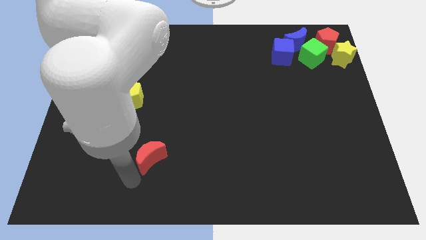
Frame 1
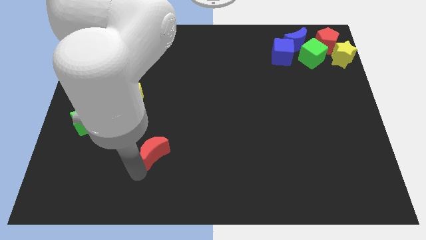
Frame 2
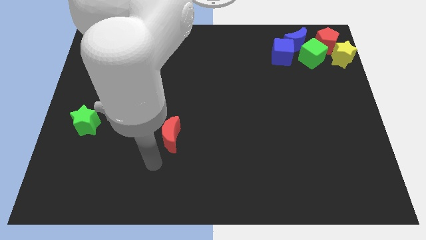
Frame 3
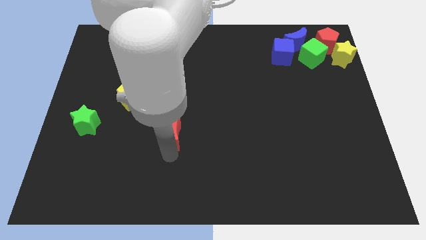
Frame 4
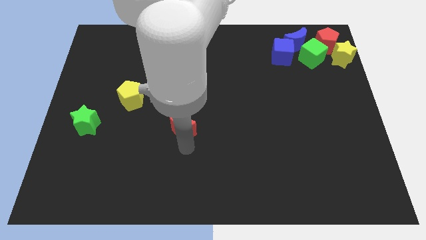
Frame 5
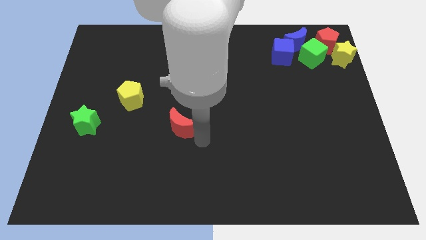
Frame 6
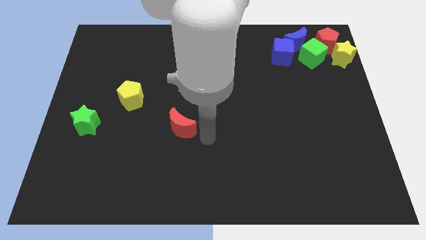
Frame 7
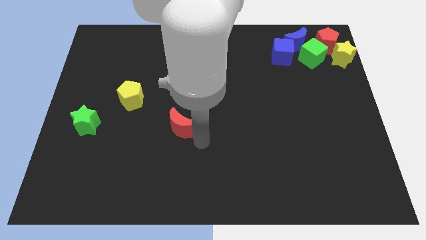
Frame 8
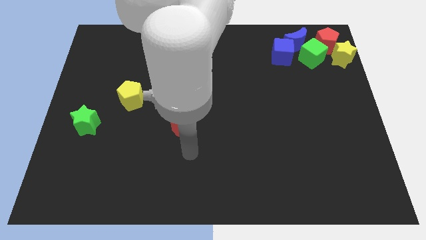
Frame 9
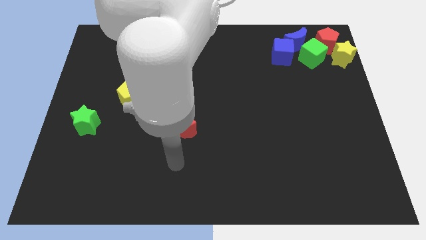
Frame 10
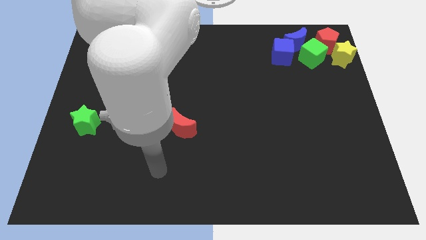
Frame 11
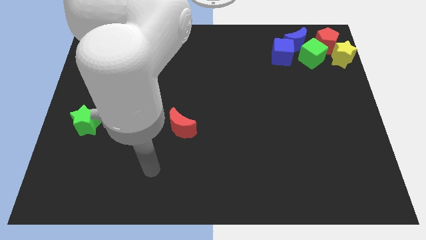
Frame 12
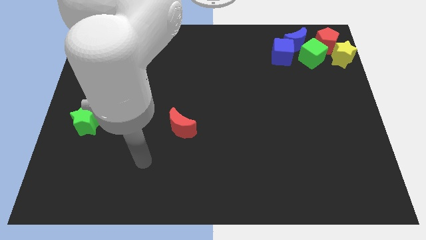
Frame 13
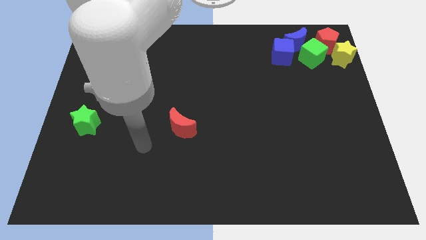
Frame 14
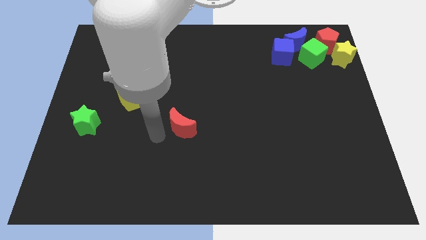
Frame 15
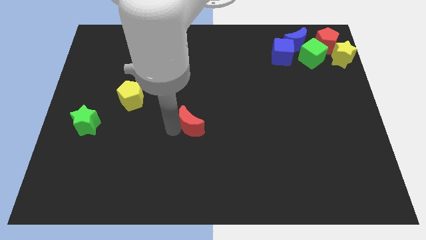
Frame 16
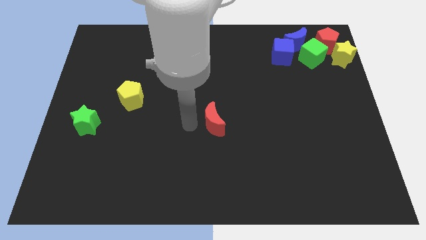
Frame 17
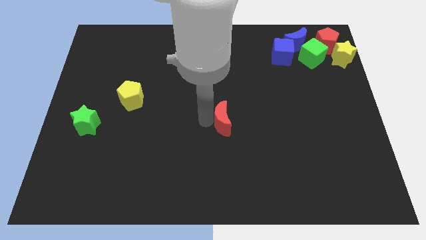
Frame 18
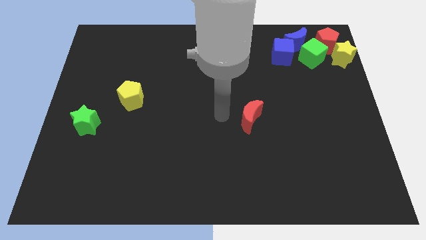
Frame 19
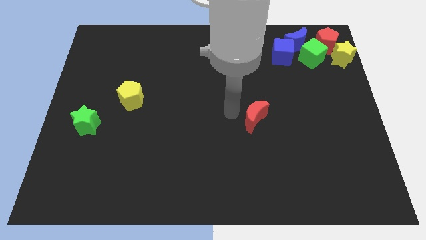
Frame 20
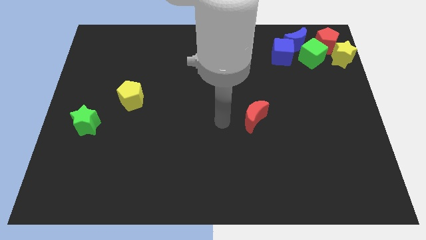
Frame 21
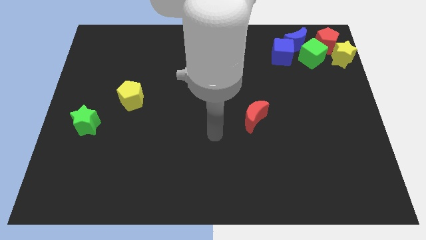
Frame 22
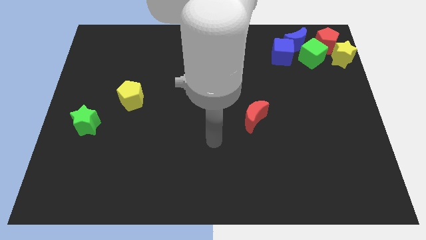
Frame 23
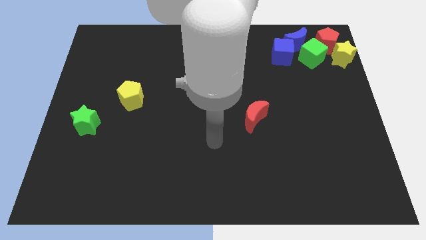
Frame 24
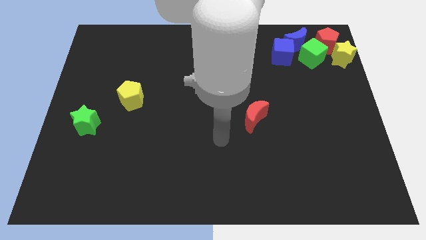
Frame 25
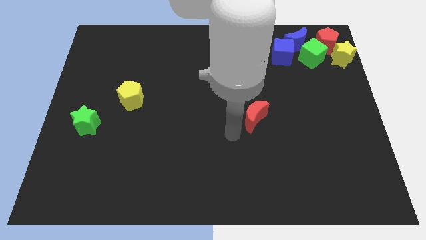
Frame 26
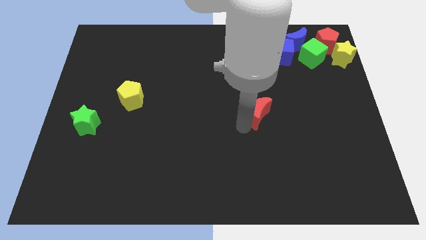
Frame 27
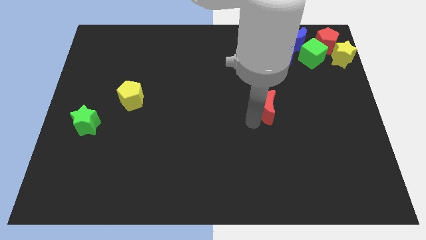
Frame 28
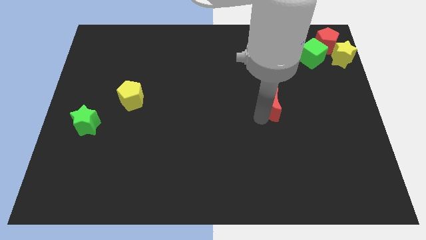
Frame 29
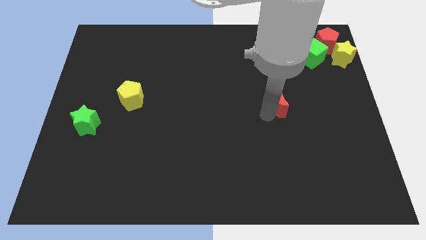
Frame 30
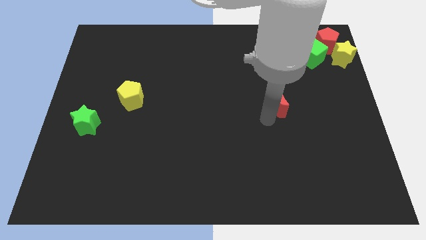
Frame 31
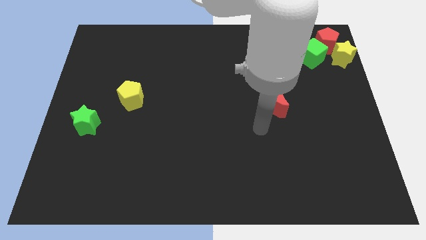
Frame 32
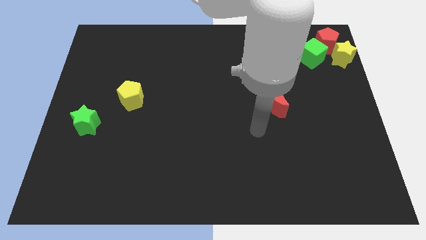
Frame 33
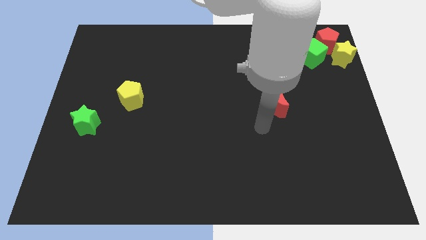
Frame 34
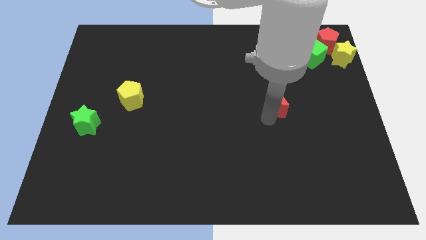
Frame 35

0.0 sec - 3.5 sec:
place the red moon diagonally to yellow star

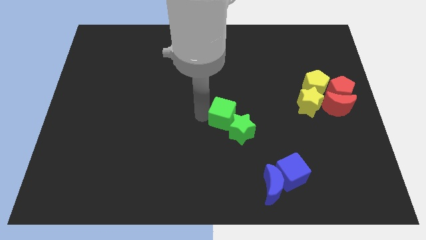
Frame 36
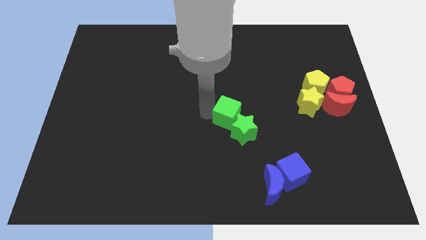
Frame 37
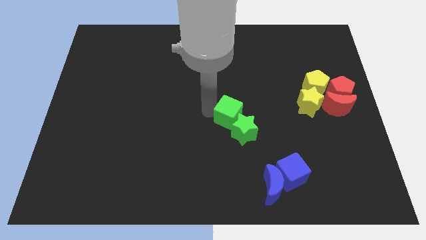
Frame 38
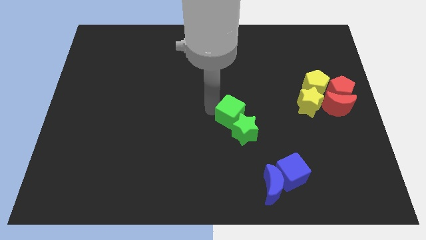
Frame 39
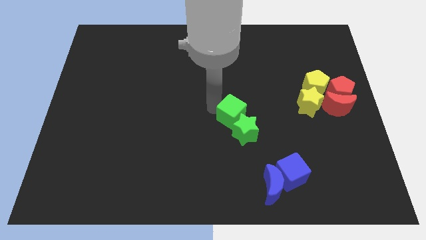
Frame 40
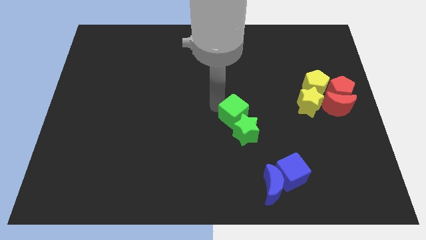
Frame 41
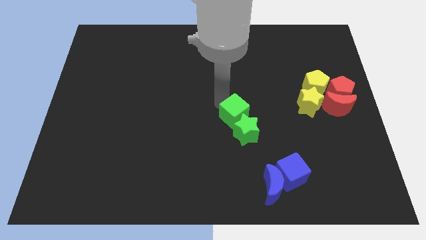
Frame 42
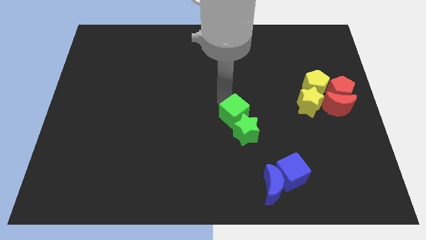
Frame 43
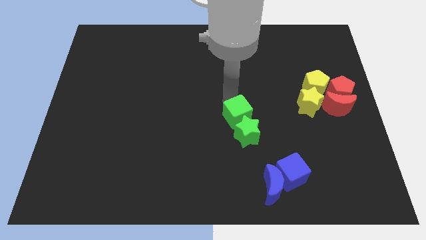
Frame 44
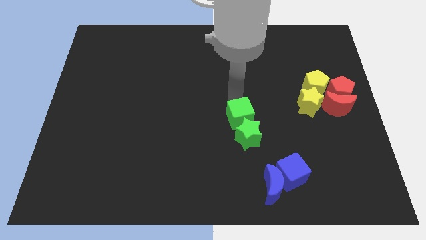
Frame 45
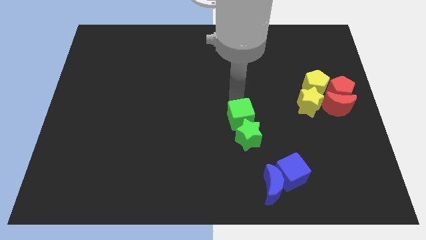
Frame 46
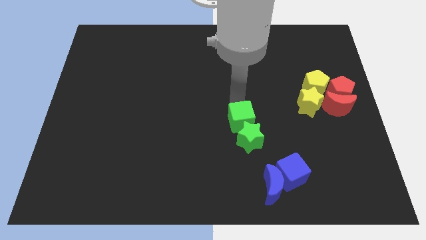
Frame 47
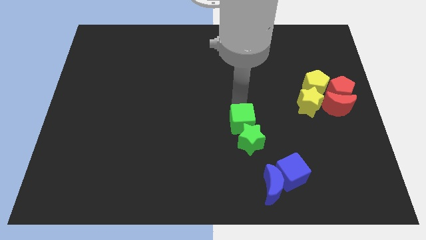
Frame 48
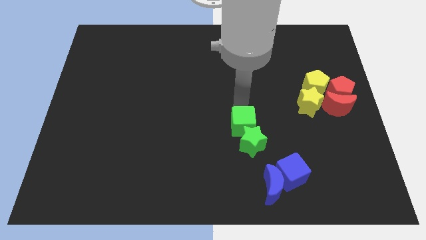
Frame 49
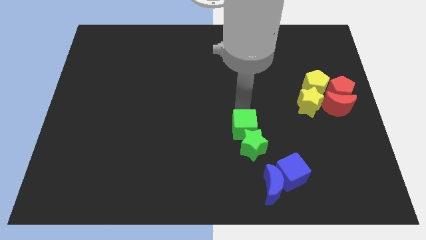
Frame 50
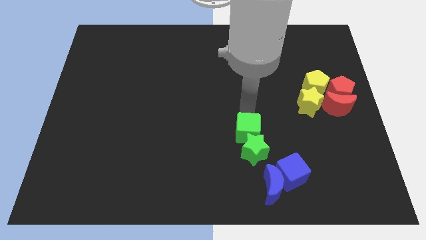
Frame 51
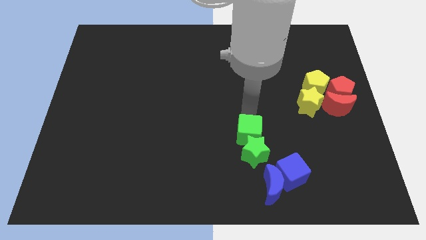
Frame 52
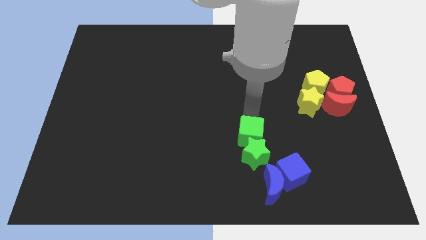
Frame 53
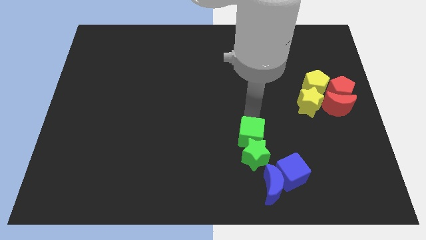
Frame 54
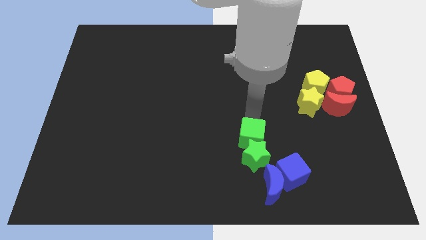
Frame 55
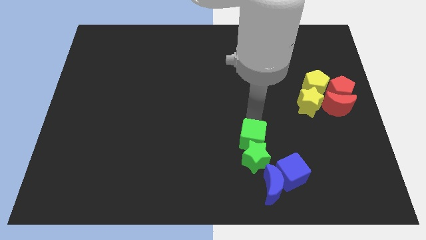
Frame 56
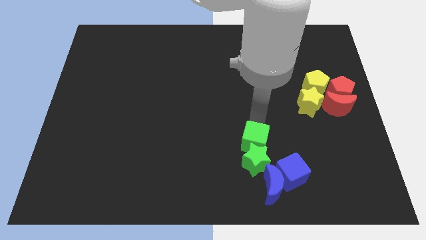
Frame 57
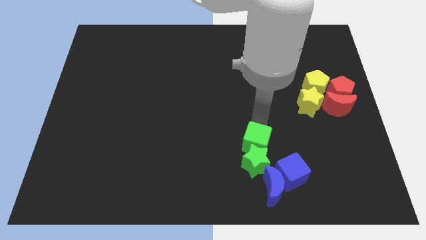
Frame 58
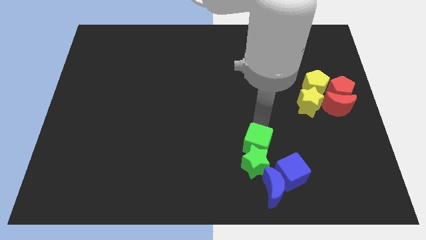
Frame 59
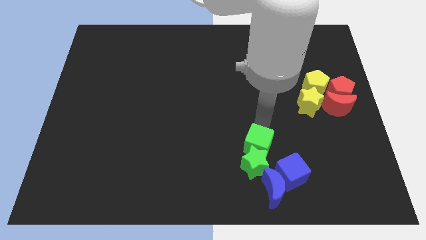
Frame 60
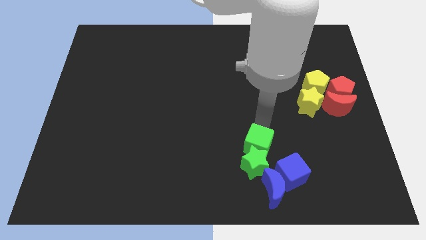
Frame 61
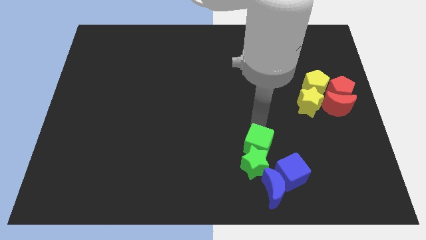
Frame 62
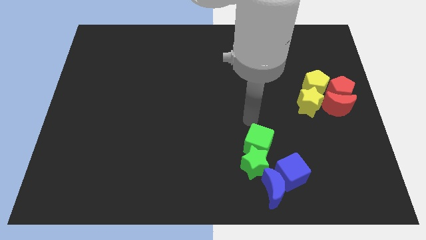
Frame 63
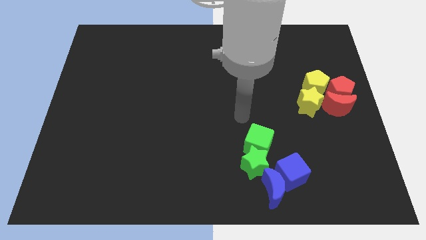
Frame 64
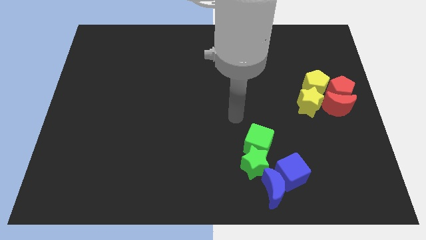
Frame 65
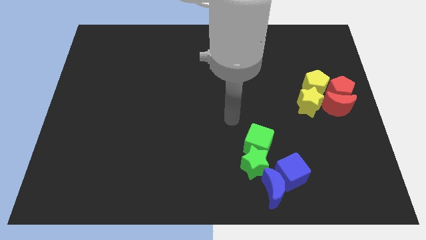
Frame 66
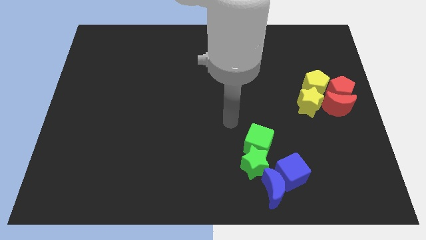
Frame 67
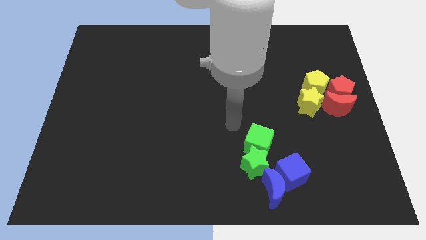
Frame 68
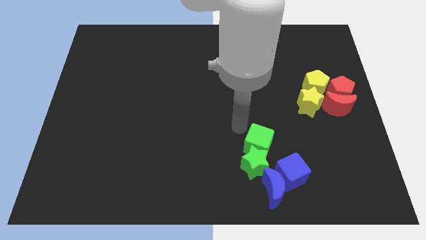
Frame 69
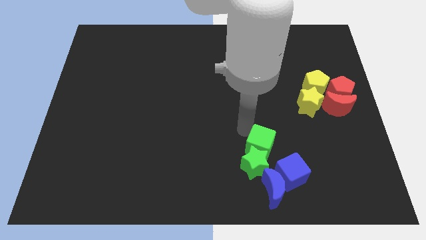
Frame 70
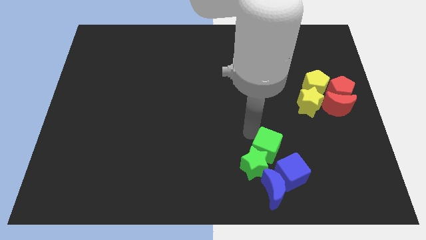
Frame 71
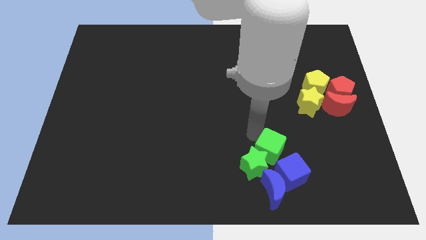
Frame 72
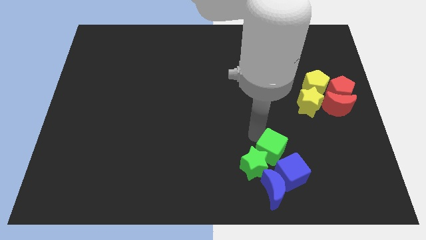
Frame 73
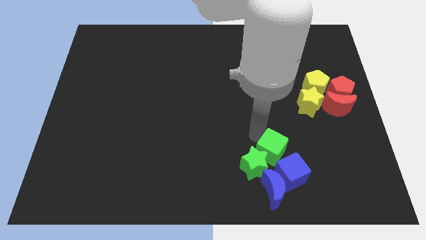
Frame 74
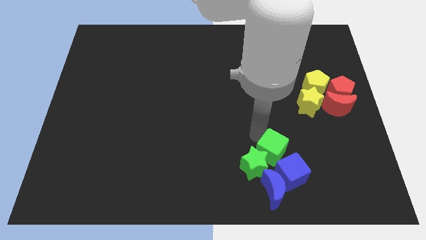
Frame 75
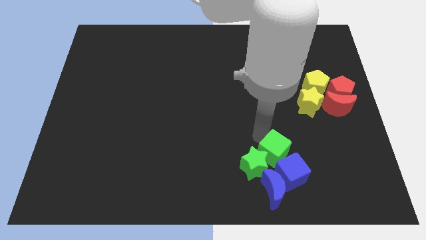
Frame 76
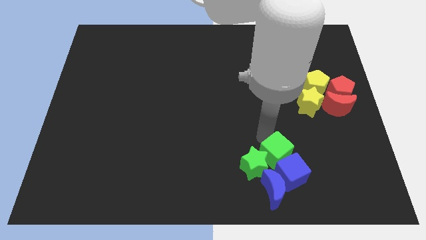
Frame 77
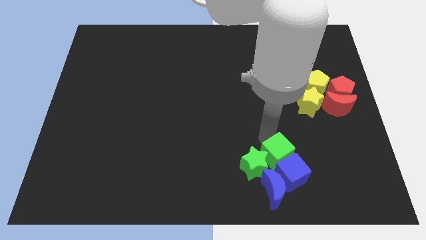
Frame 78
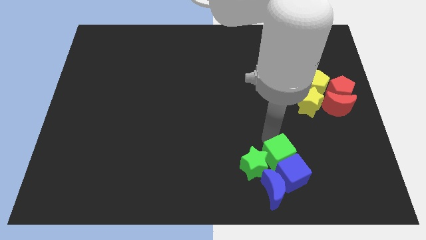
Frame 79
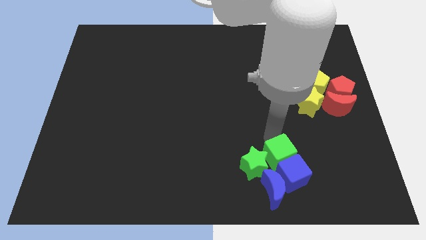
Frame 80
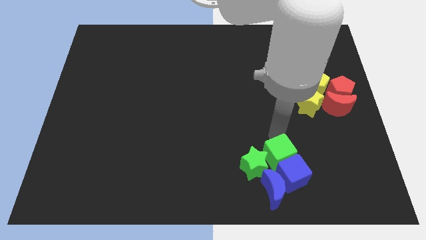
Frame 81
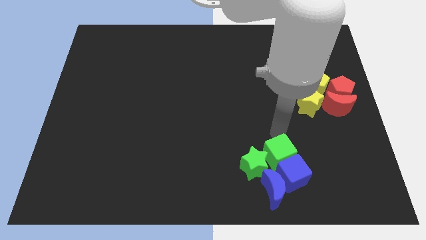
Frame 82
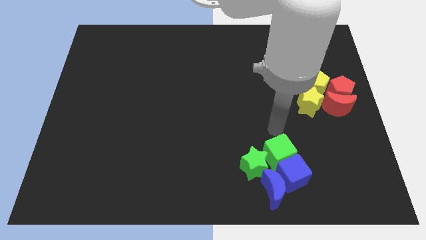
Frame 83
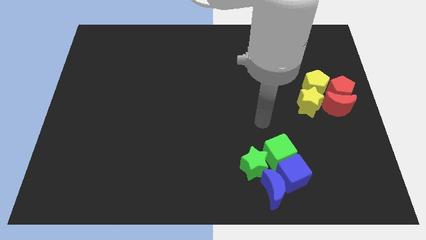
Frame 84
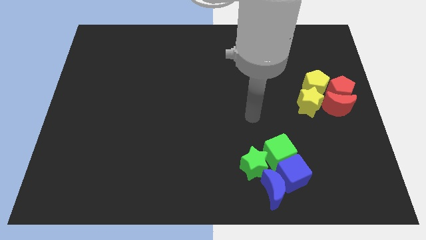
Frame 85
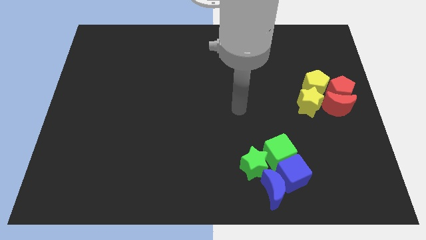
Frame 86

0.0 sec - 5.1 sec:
place the green blocks above the blue blocks

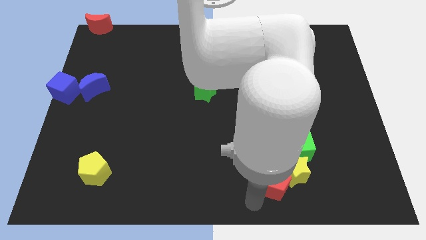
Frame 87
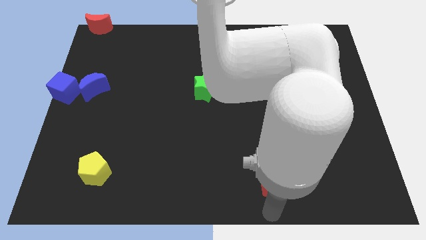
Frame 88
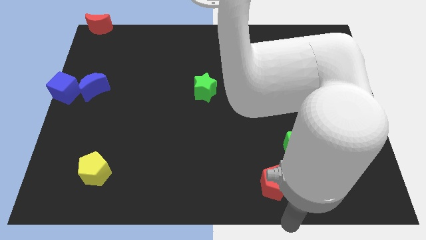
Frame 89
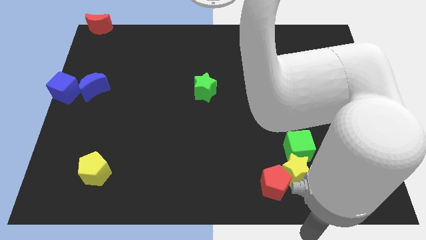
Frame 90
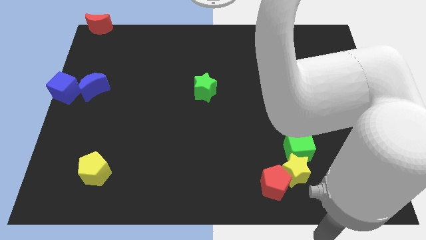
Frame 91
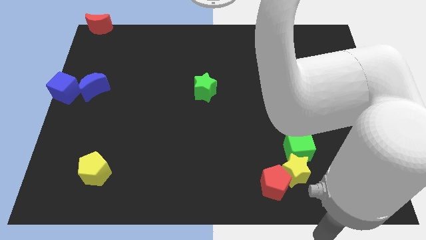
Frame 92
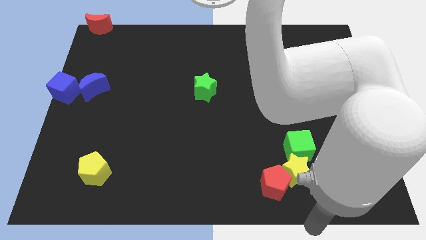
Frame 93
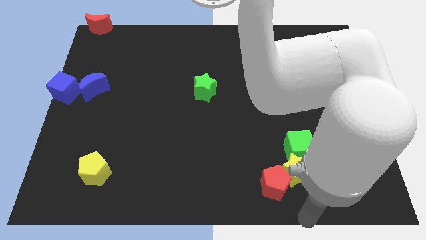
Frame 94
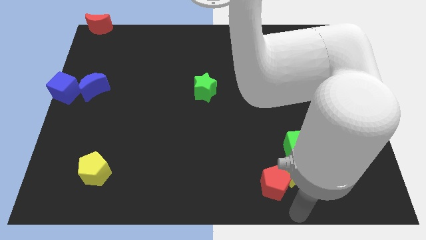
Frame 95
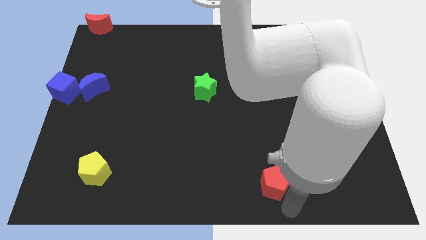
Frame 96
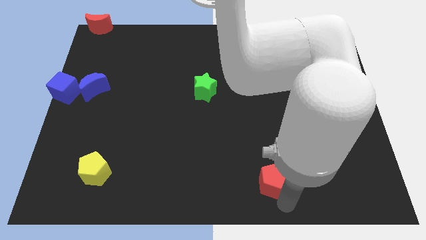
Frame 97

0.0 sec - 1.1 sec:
touch the bottom of red pentagon
